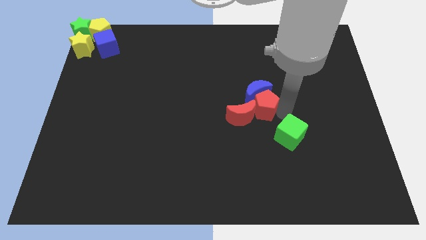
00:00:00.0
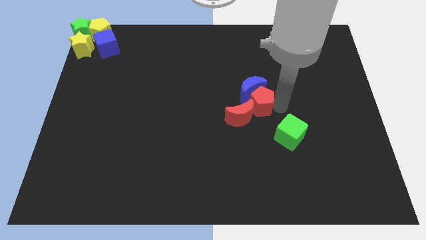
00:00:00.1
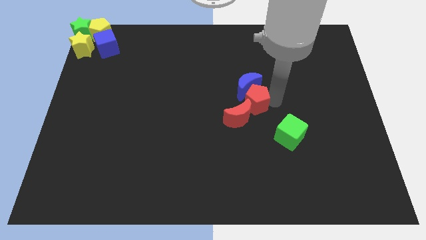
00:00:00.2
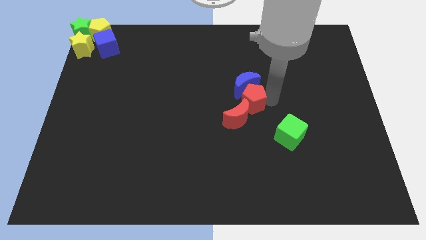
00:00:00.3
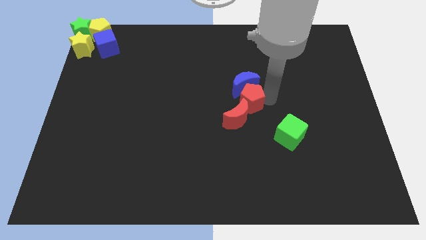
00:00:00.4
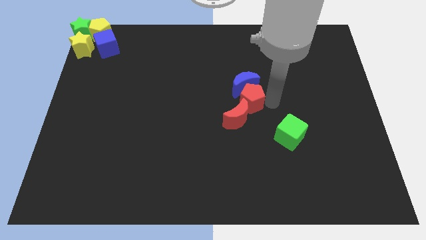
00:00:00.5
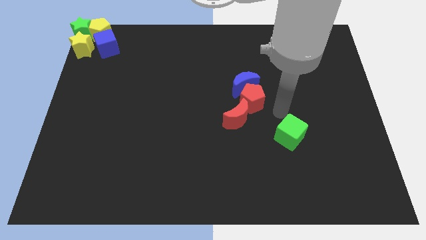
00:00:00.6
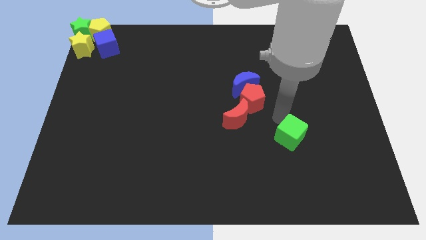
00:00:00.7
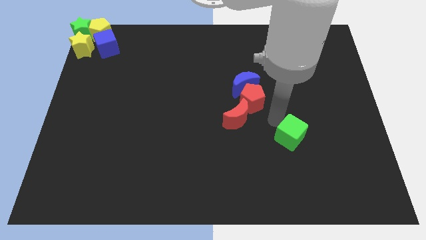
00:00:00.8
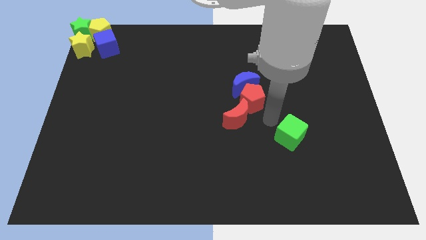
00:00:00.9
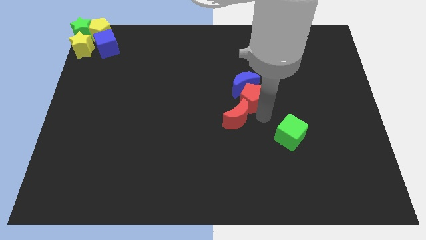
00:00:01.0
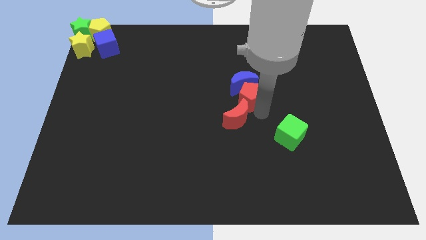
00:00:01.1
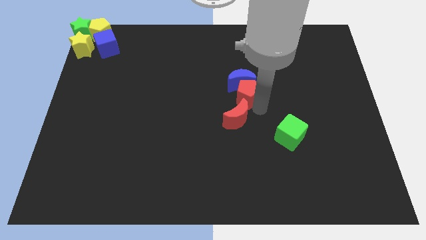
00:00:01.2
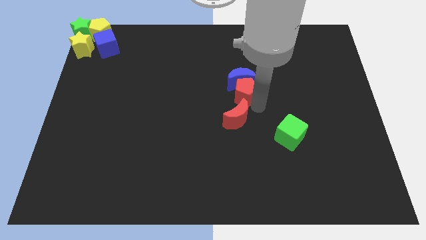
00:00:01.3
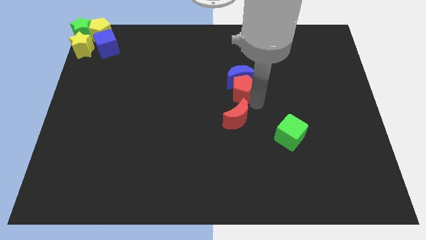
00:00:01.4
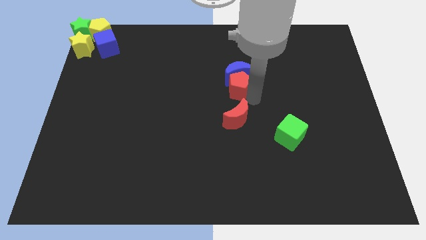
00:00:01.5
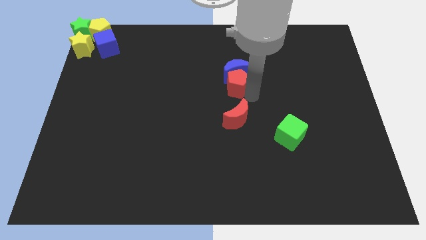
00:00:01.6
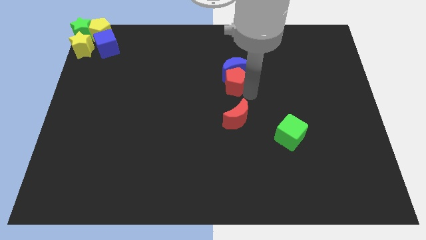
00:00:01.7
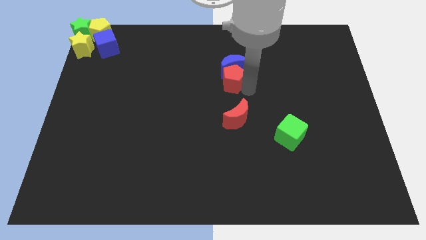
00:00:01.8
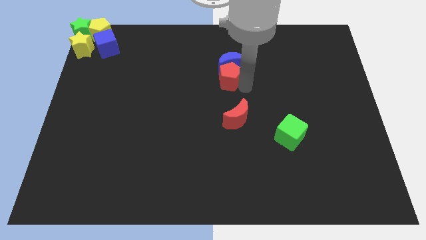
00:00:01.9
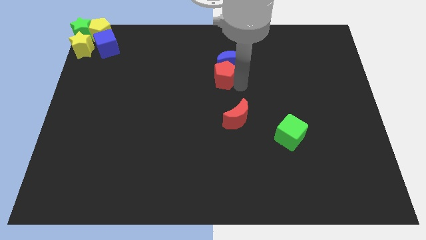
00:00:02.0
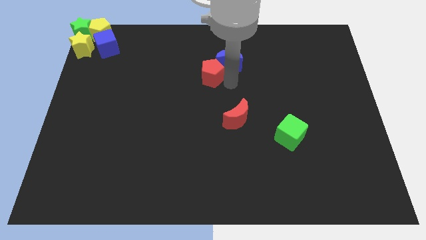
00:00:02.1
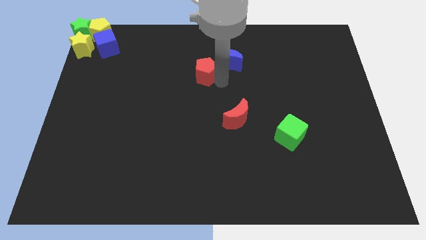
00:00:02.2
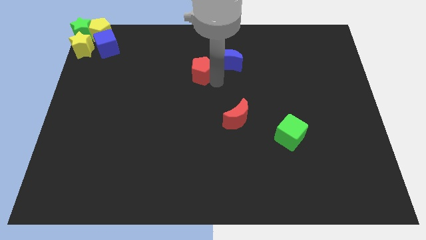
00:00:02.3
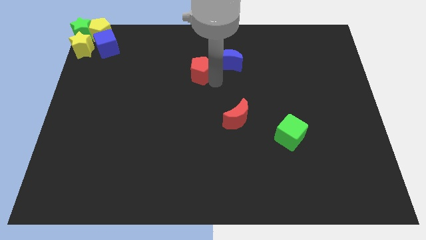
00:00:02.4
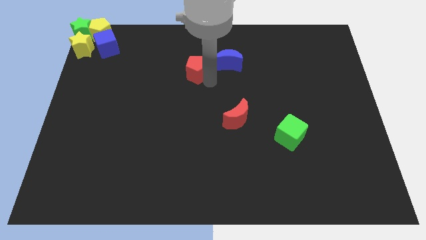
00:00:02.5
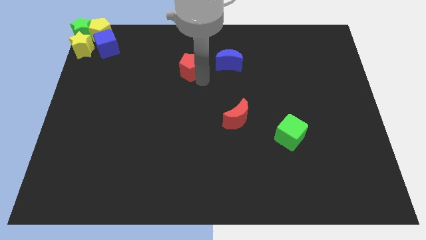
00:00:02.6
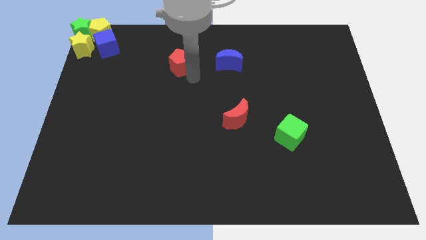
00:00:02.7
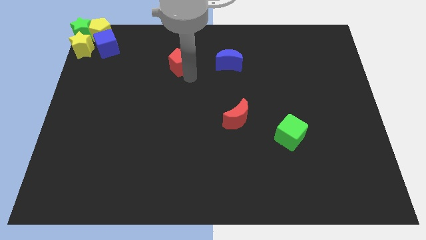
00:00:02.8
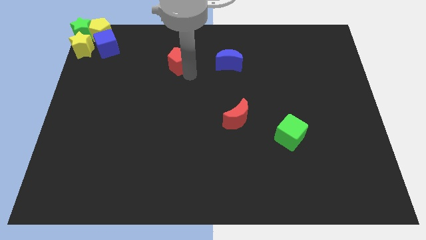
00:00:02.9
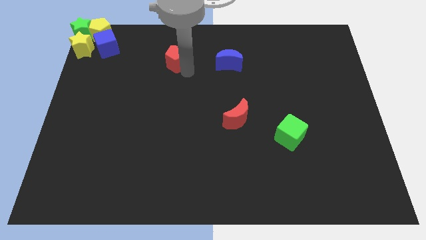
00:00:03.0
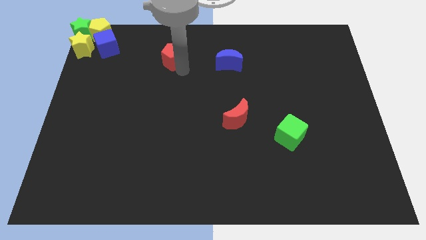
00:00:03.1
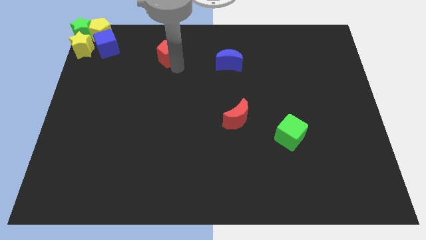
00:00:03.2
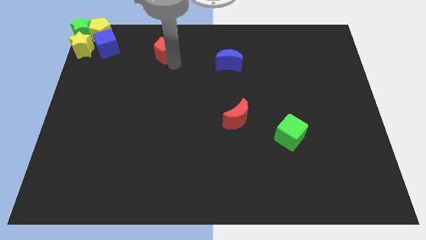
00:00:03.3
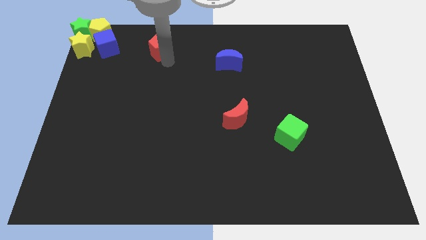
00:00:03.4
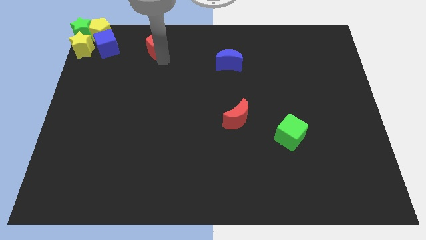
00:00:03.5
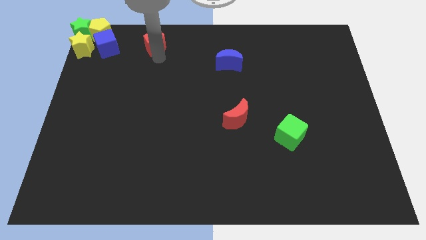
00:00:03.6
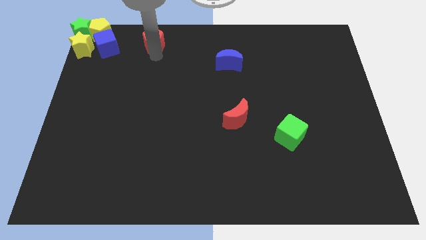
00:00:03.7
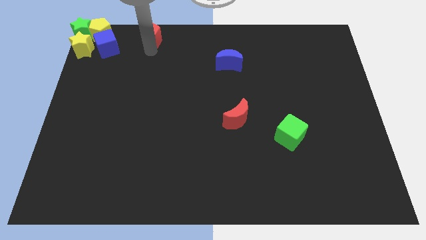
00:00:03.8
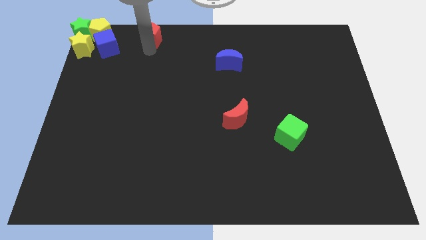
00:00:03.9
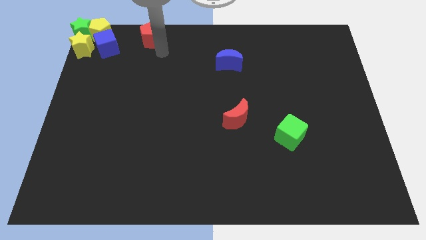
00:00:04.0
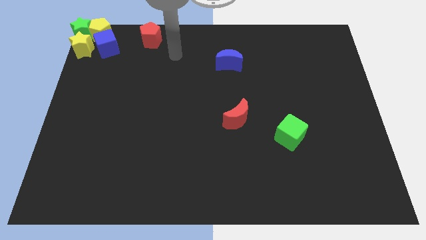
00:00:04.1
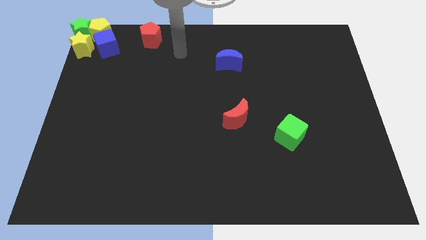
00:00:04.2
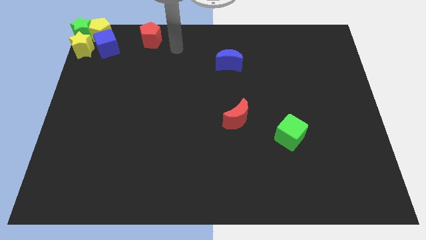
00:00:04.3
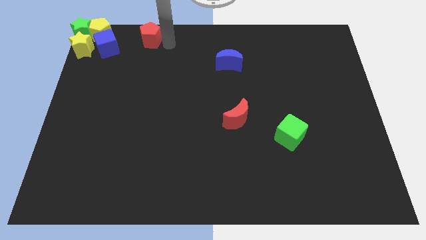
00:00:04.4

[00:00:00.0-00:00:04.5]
place the red pentagon at the right side of the group of blocks

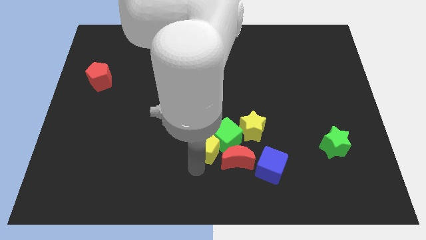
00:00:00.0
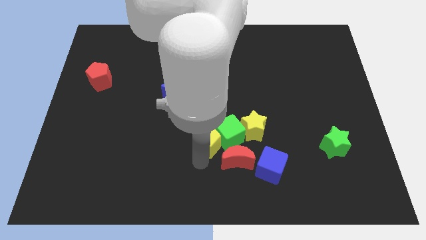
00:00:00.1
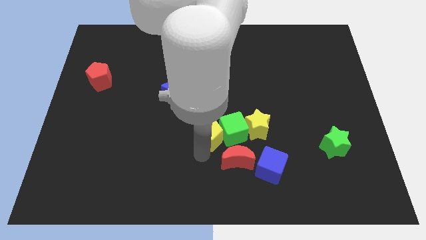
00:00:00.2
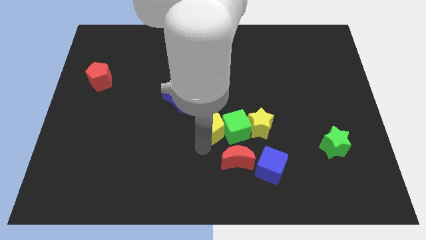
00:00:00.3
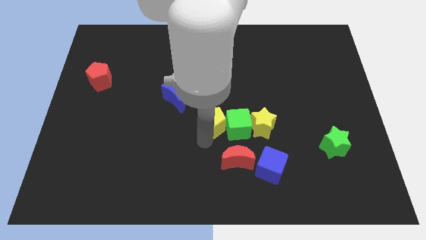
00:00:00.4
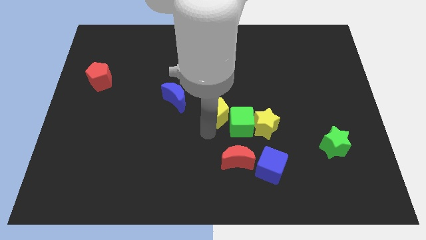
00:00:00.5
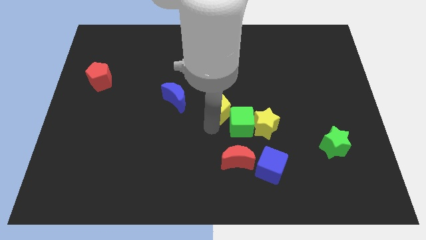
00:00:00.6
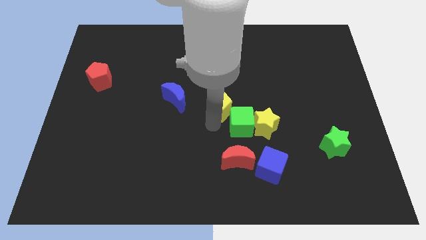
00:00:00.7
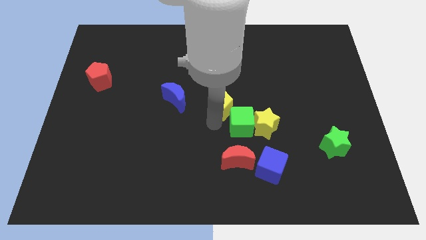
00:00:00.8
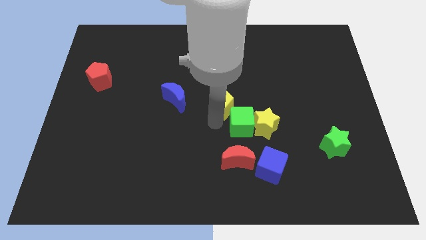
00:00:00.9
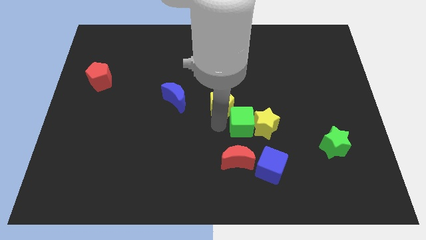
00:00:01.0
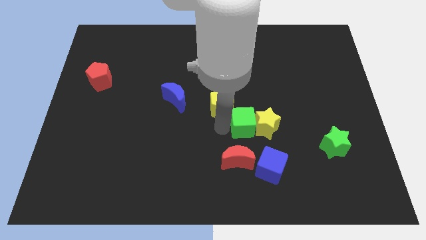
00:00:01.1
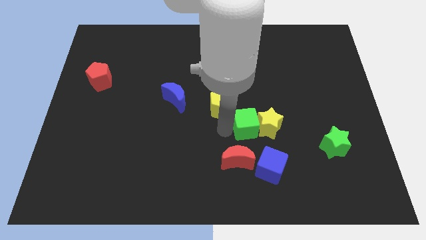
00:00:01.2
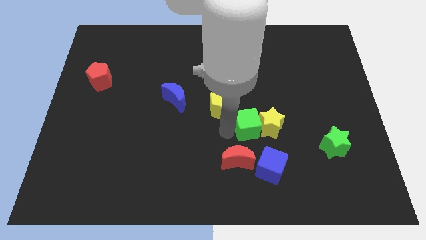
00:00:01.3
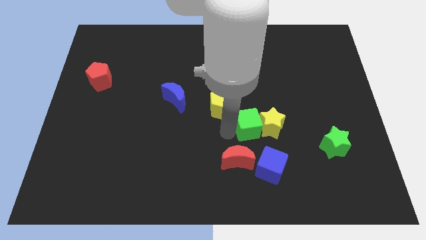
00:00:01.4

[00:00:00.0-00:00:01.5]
push the yellow pentagon to the right of the blue crescent

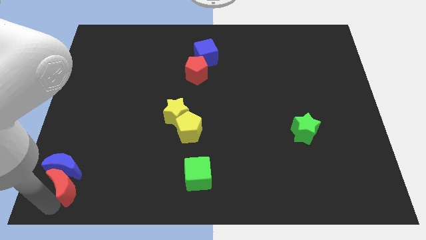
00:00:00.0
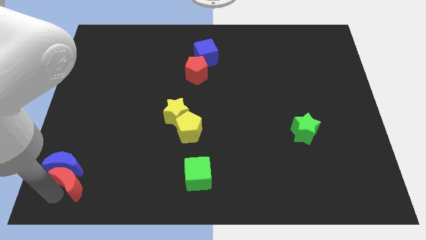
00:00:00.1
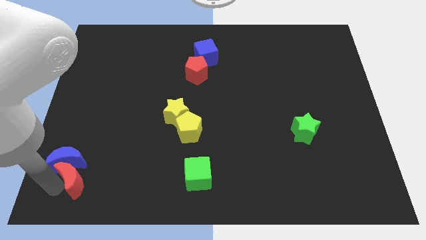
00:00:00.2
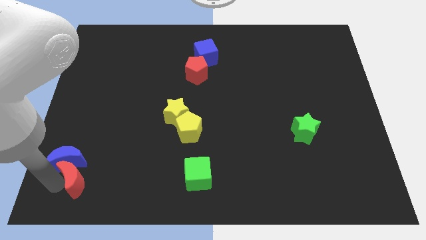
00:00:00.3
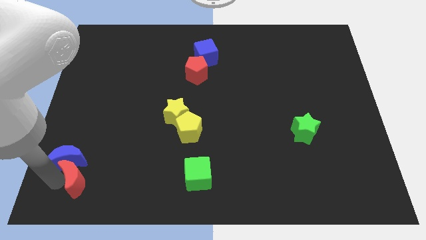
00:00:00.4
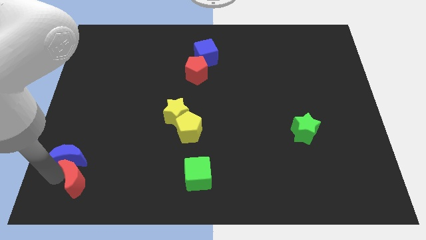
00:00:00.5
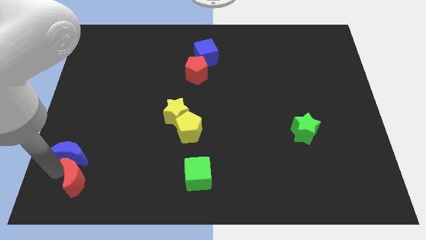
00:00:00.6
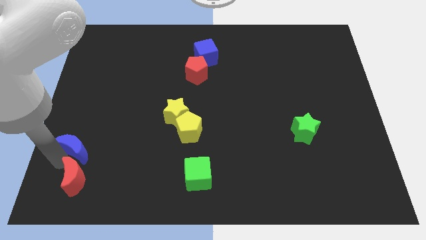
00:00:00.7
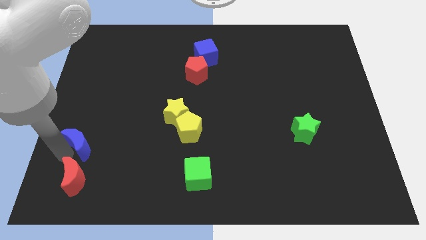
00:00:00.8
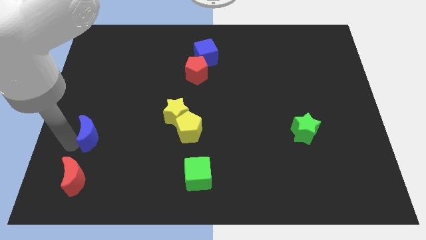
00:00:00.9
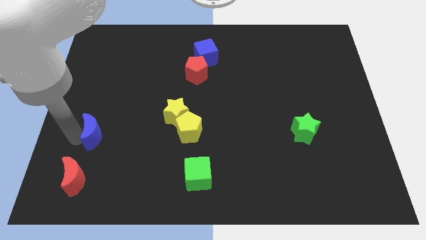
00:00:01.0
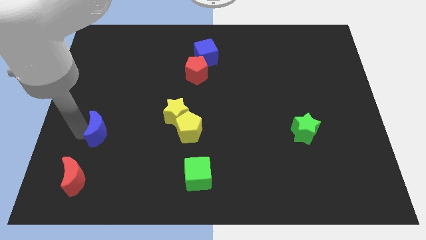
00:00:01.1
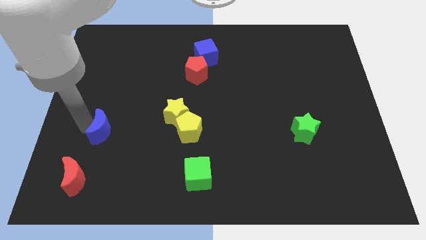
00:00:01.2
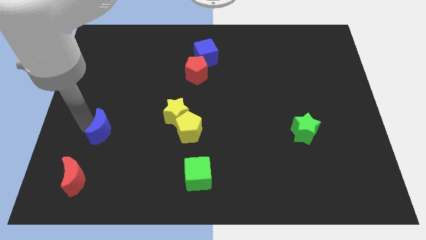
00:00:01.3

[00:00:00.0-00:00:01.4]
separate the blue crescent from the red crescent

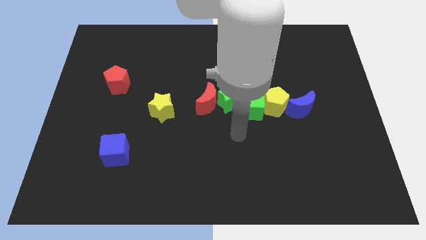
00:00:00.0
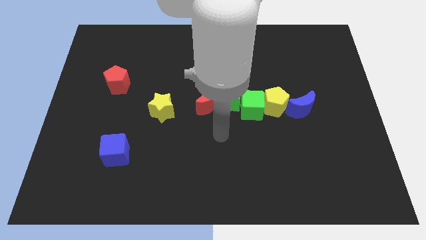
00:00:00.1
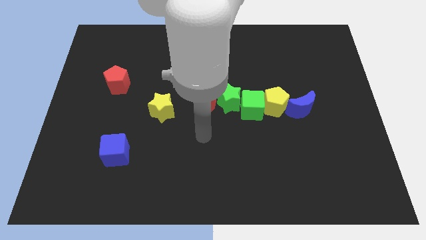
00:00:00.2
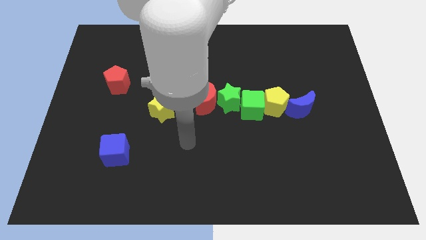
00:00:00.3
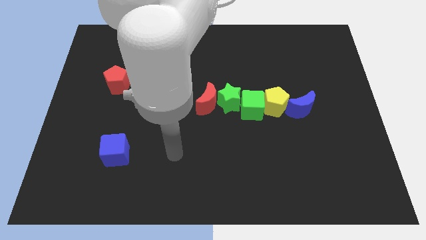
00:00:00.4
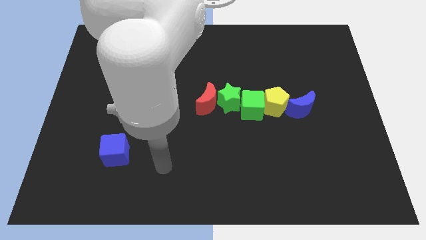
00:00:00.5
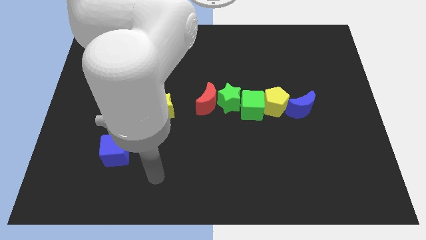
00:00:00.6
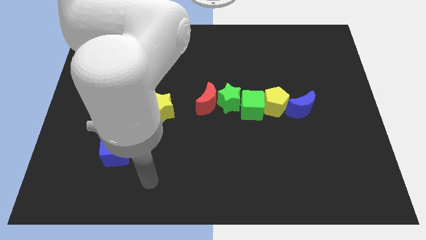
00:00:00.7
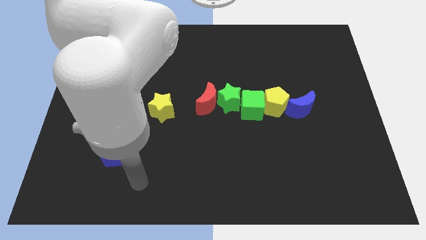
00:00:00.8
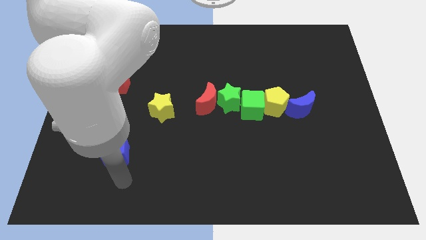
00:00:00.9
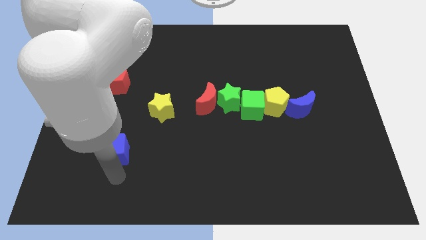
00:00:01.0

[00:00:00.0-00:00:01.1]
move your arm to the bottom of the blue cube

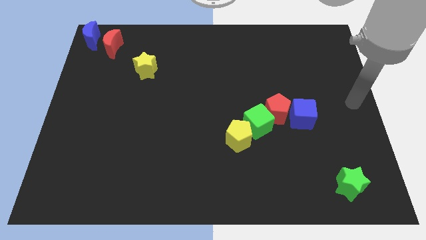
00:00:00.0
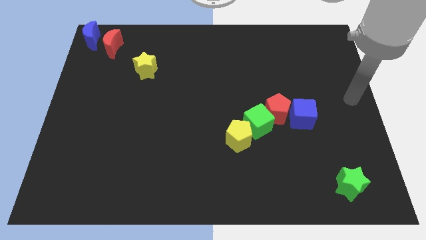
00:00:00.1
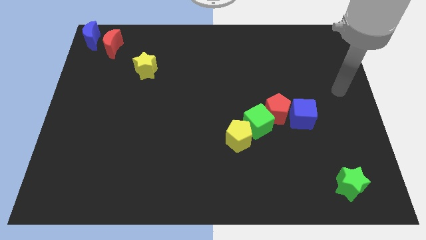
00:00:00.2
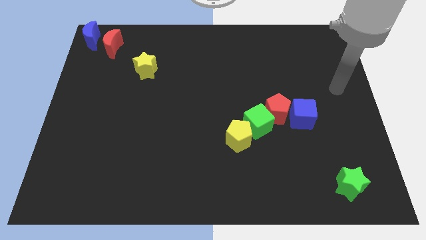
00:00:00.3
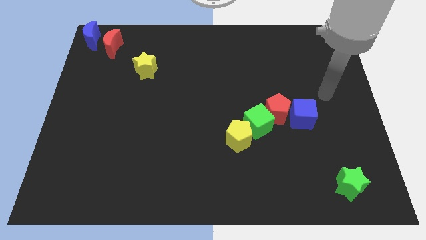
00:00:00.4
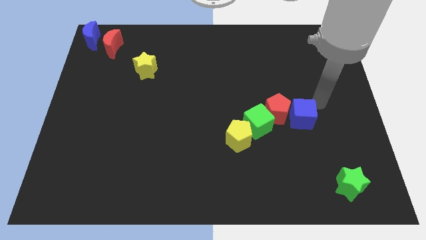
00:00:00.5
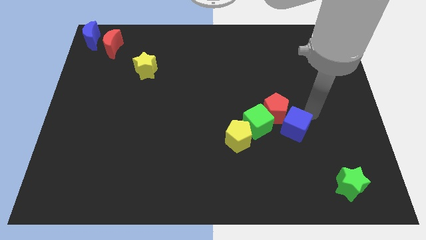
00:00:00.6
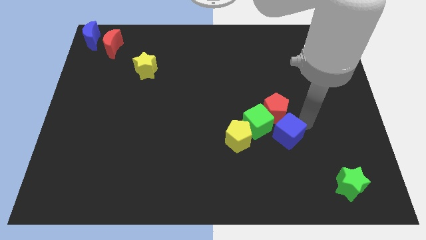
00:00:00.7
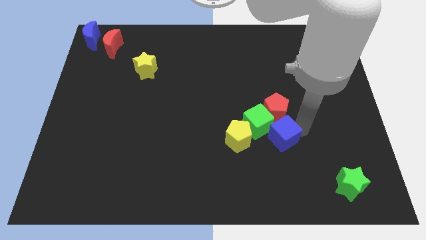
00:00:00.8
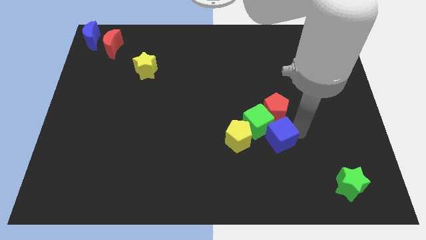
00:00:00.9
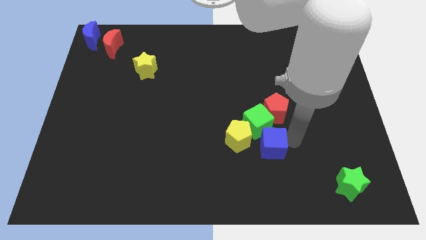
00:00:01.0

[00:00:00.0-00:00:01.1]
separate the blue cube from the red pentagon
